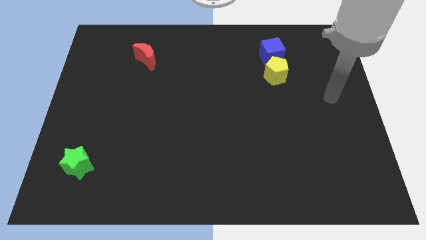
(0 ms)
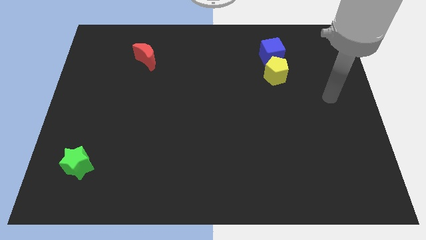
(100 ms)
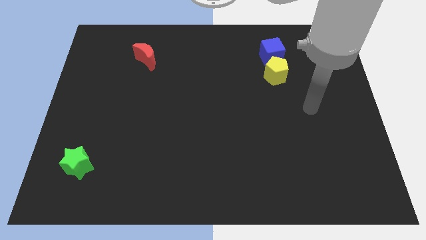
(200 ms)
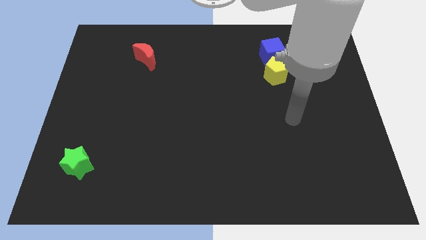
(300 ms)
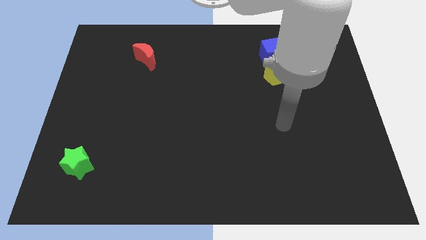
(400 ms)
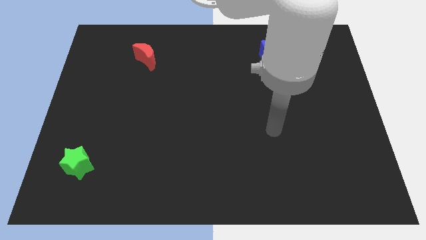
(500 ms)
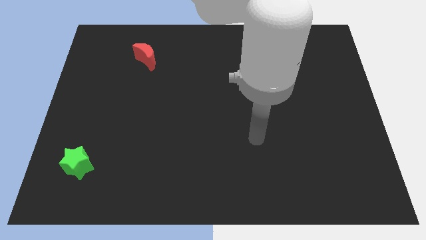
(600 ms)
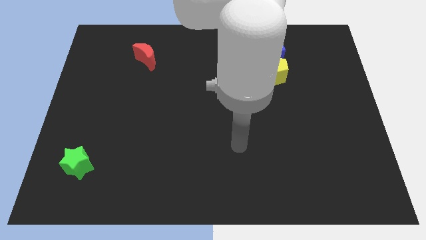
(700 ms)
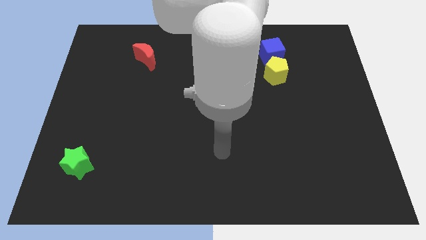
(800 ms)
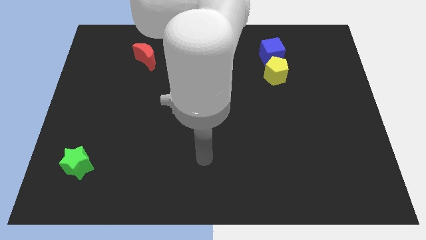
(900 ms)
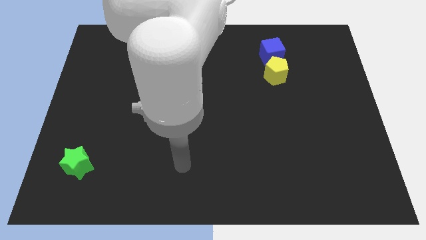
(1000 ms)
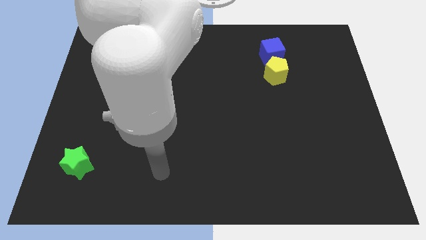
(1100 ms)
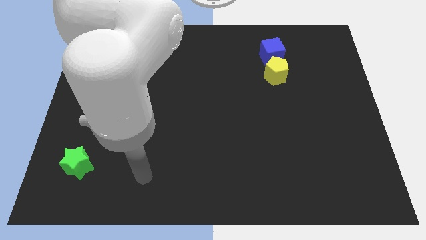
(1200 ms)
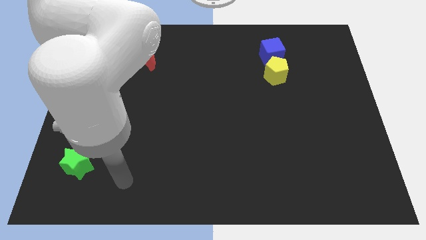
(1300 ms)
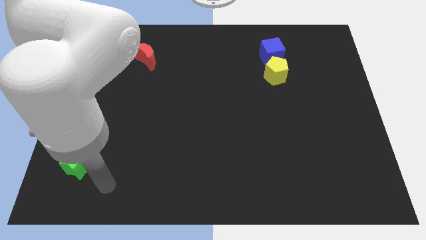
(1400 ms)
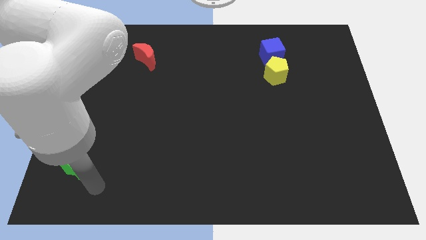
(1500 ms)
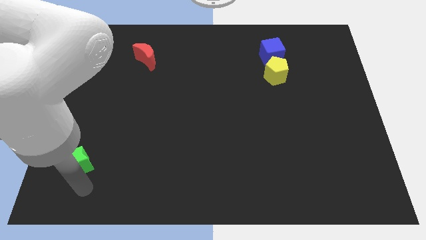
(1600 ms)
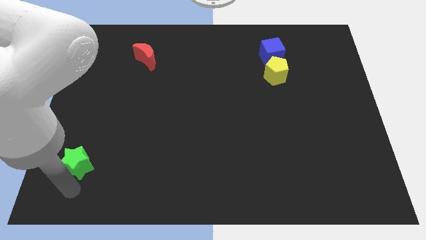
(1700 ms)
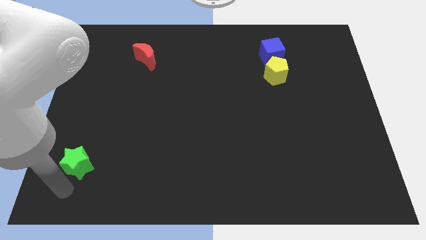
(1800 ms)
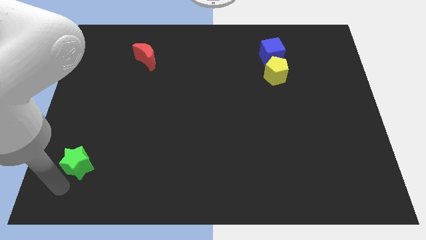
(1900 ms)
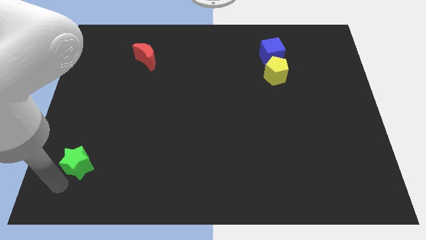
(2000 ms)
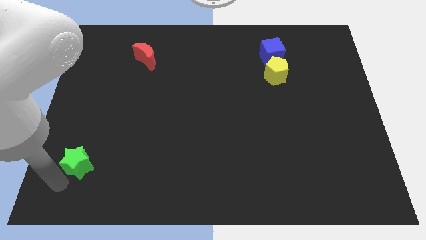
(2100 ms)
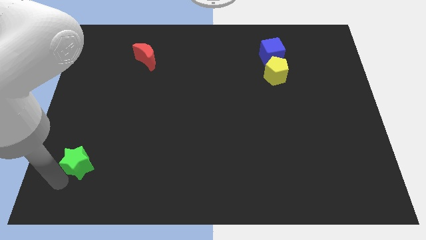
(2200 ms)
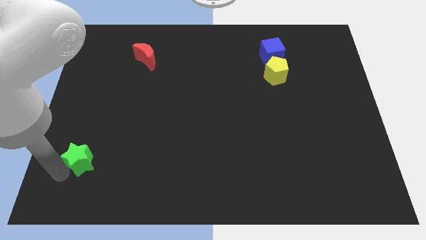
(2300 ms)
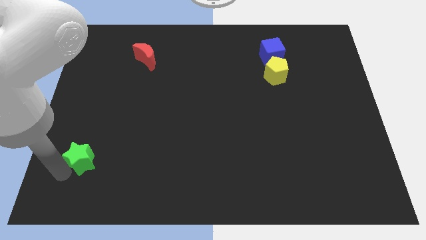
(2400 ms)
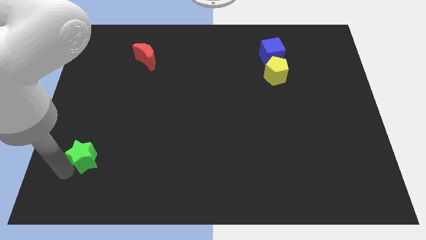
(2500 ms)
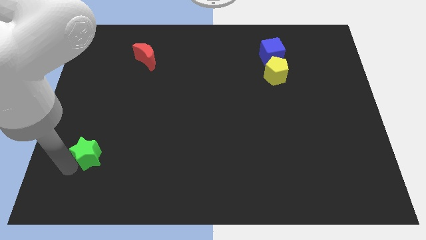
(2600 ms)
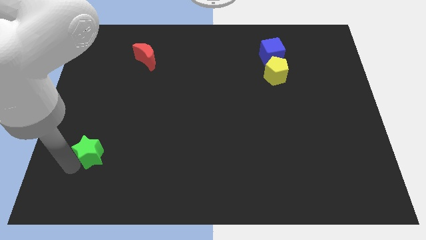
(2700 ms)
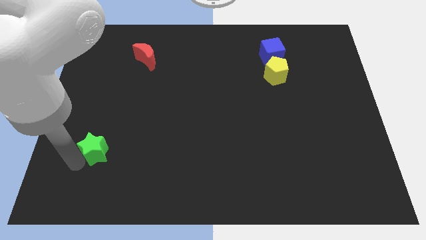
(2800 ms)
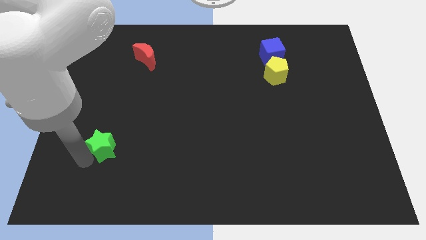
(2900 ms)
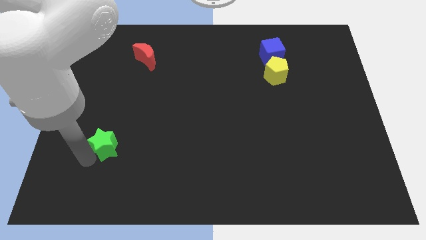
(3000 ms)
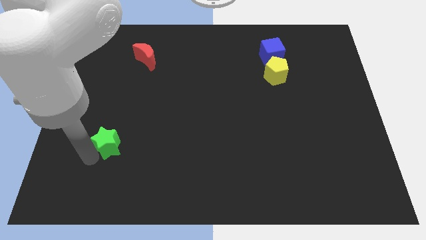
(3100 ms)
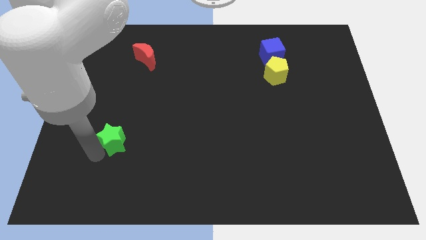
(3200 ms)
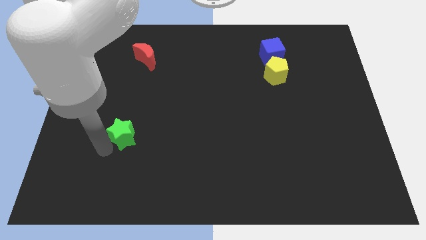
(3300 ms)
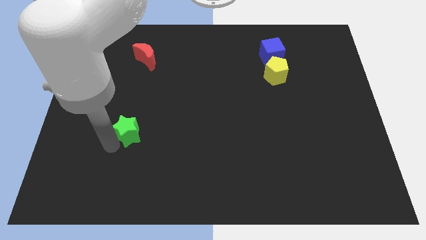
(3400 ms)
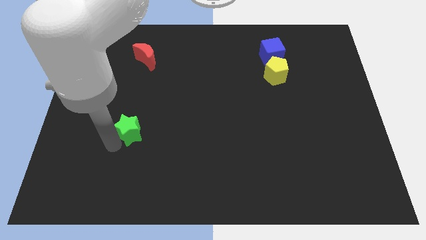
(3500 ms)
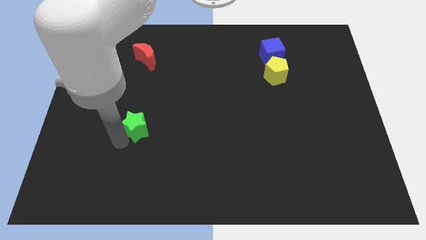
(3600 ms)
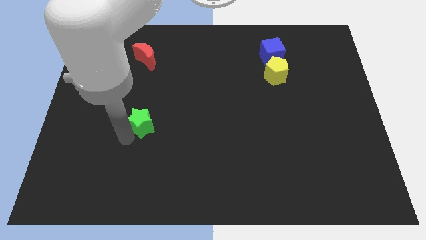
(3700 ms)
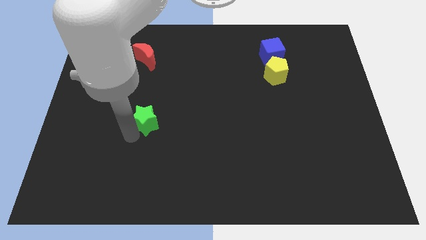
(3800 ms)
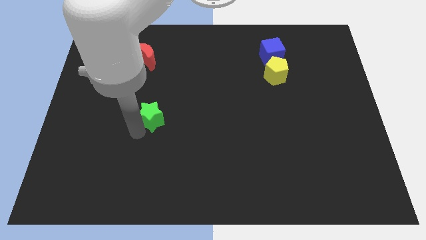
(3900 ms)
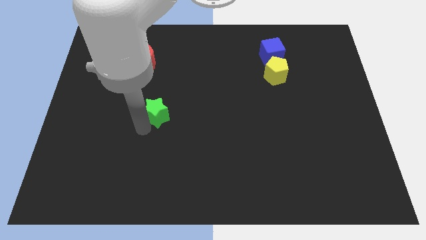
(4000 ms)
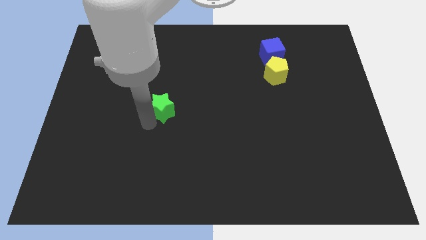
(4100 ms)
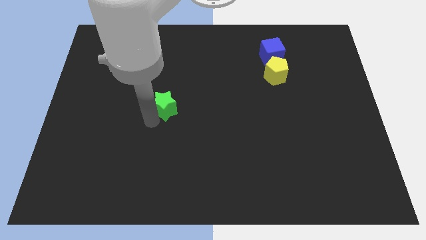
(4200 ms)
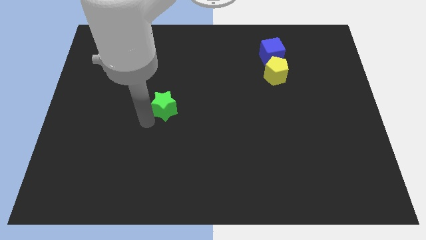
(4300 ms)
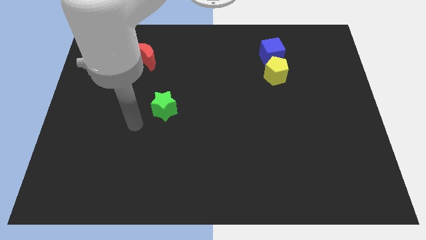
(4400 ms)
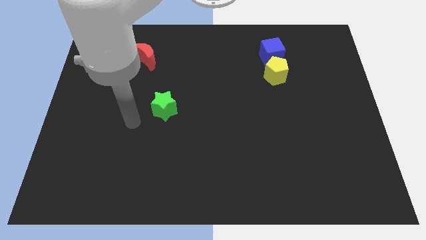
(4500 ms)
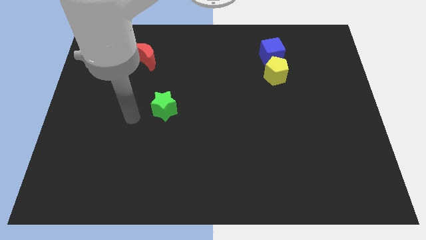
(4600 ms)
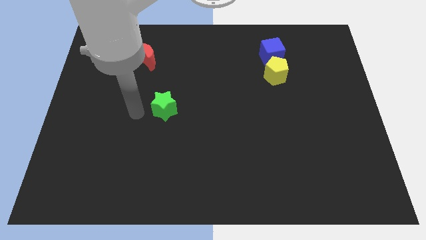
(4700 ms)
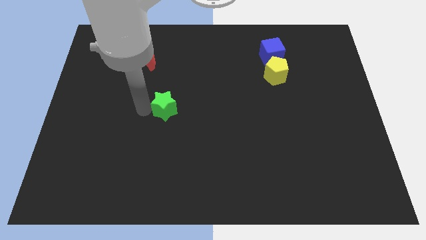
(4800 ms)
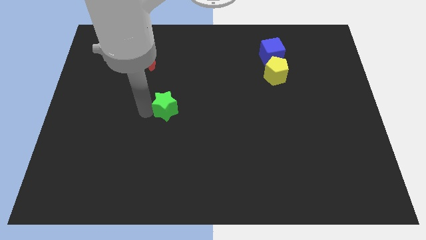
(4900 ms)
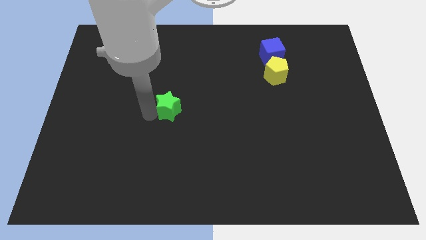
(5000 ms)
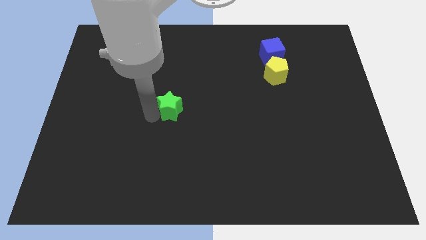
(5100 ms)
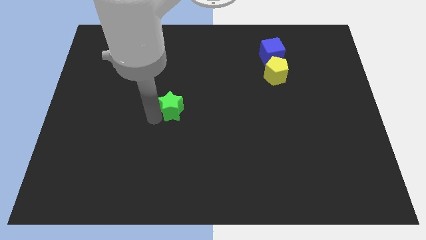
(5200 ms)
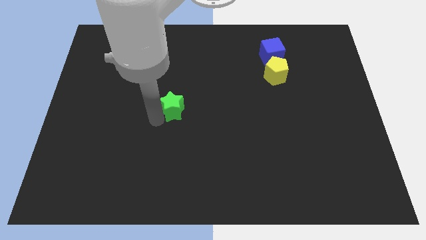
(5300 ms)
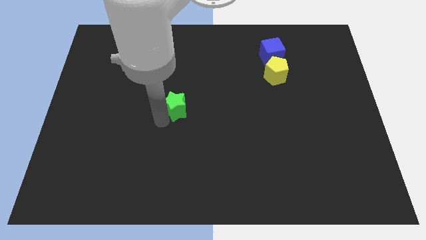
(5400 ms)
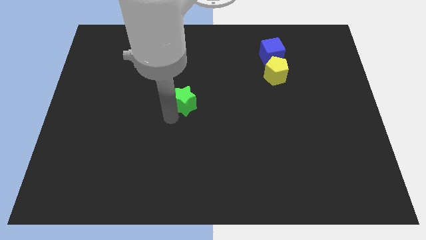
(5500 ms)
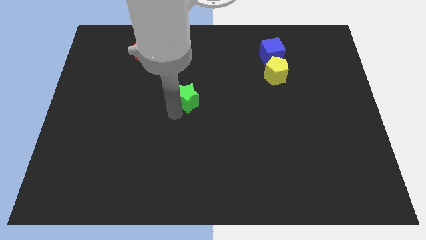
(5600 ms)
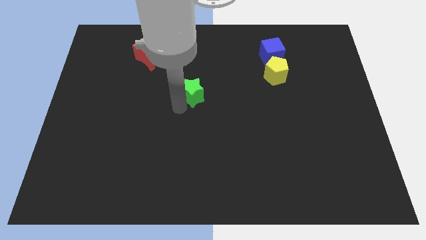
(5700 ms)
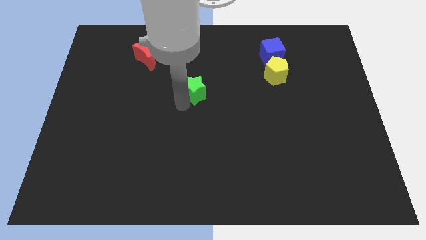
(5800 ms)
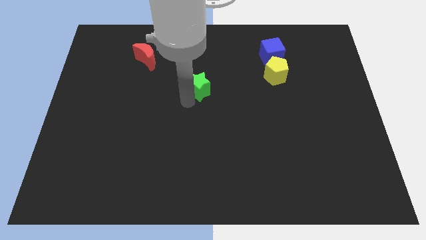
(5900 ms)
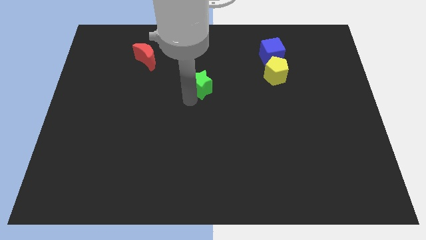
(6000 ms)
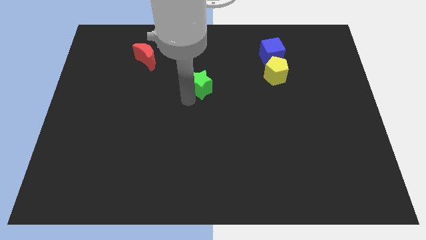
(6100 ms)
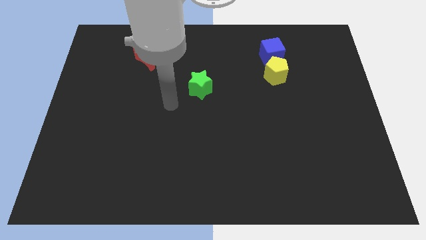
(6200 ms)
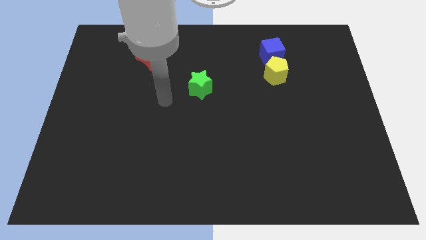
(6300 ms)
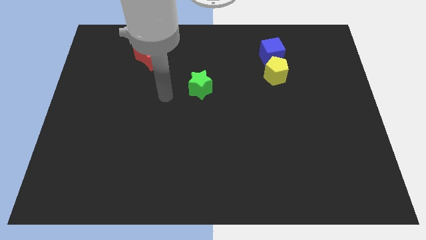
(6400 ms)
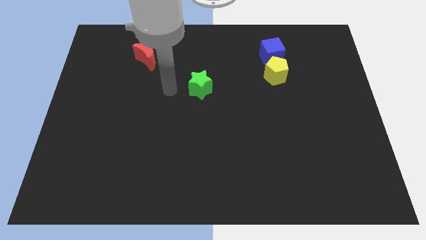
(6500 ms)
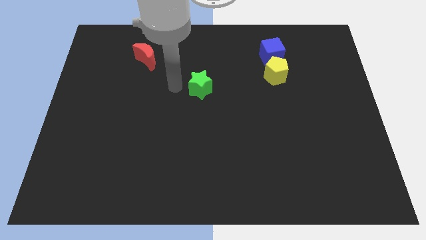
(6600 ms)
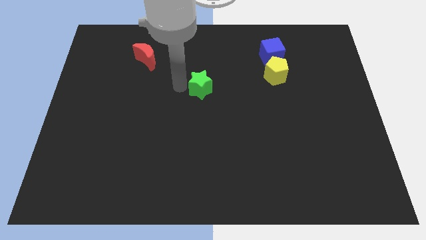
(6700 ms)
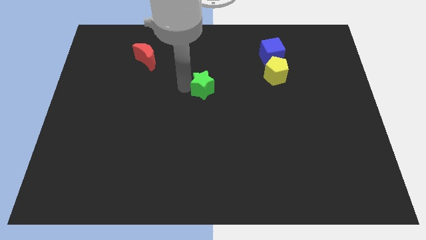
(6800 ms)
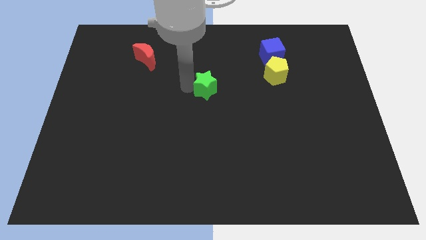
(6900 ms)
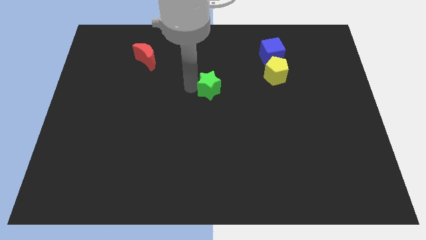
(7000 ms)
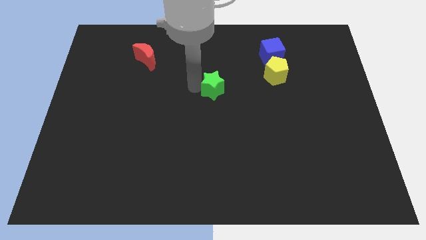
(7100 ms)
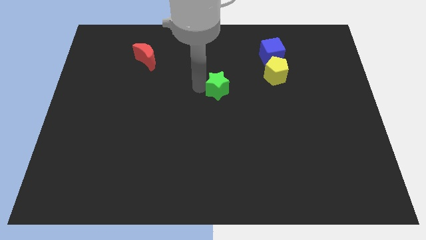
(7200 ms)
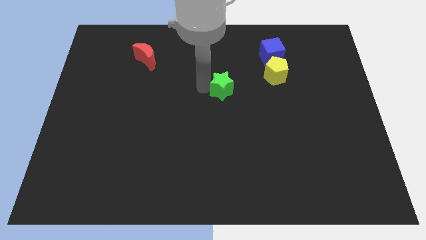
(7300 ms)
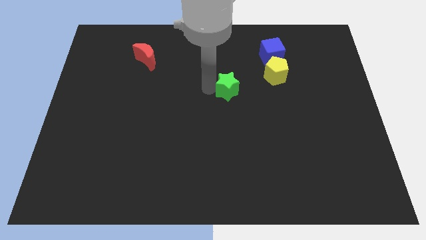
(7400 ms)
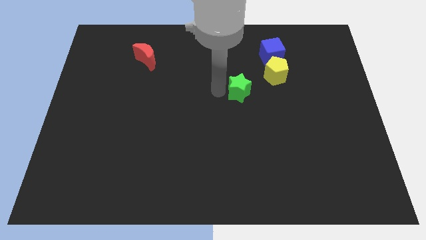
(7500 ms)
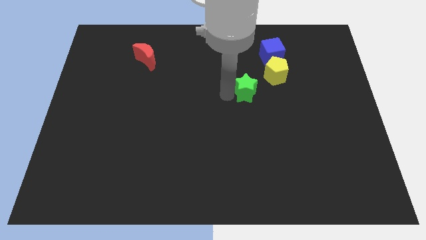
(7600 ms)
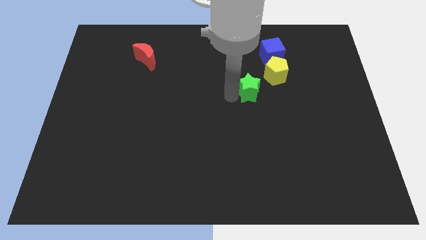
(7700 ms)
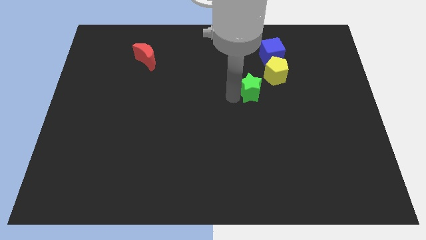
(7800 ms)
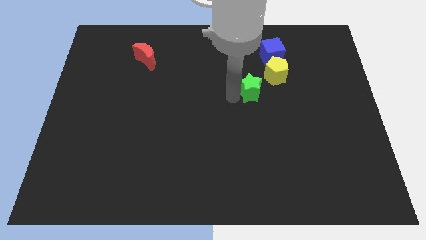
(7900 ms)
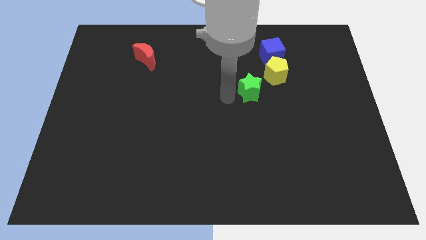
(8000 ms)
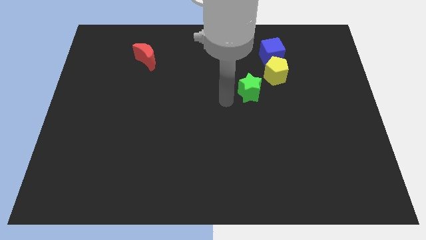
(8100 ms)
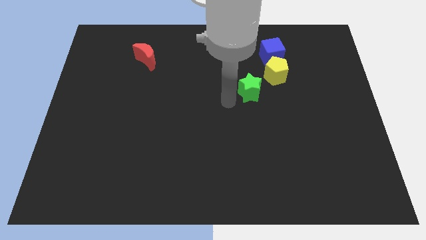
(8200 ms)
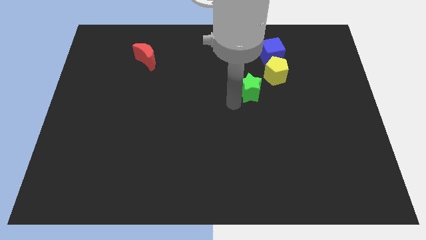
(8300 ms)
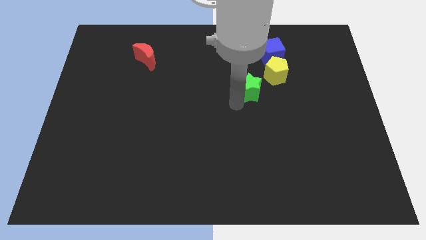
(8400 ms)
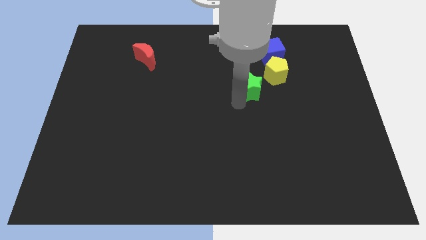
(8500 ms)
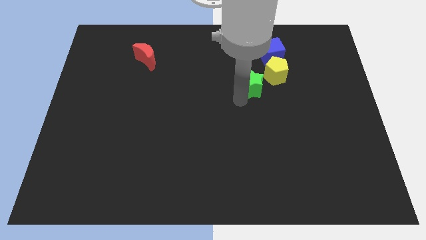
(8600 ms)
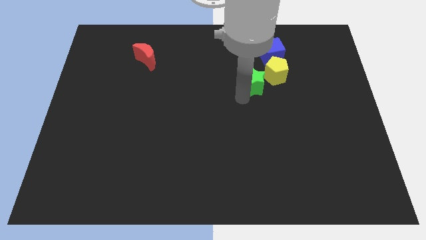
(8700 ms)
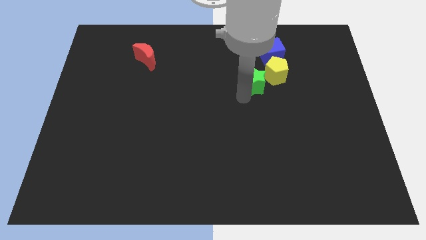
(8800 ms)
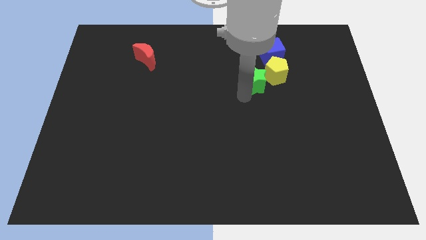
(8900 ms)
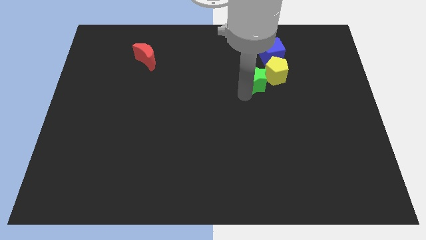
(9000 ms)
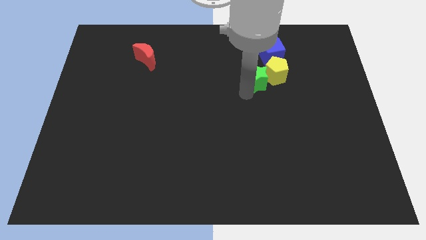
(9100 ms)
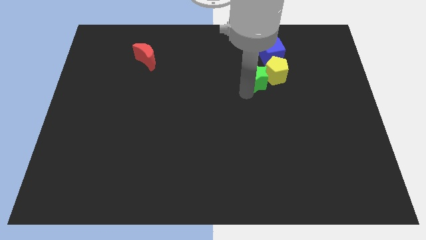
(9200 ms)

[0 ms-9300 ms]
push the green block next to the yellow block
